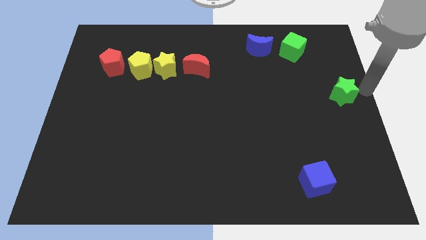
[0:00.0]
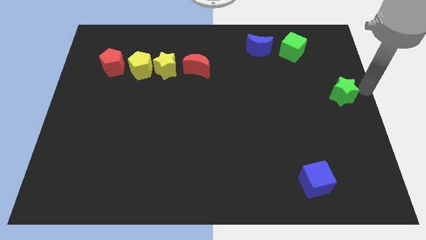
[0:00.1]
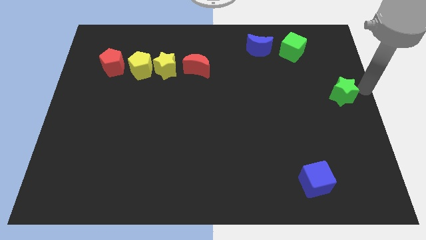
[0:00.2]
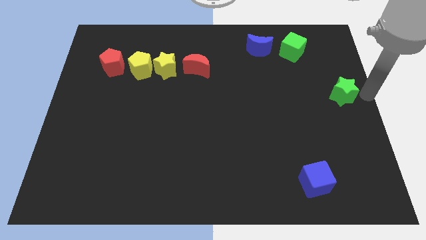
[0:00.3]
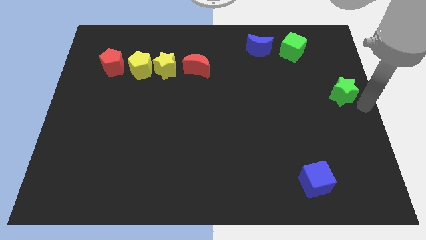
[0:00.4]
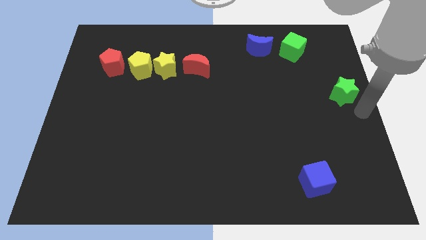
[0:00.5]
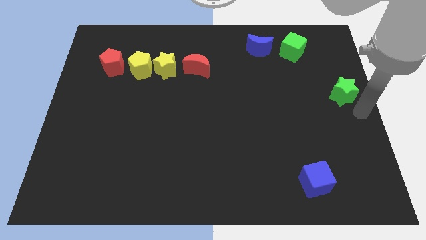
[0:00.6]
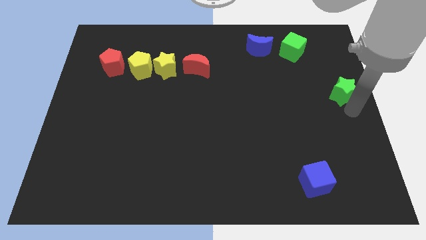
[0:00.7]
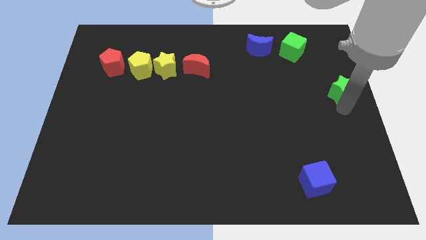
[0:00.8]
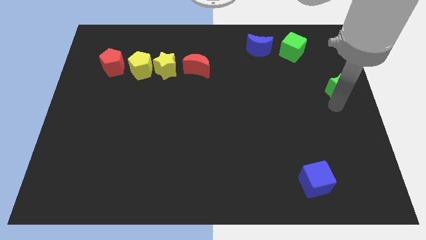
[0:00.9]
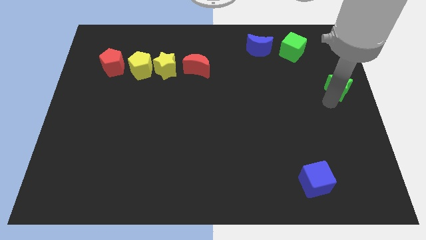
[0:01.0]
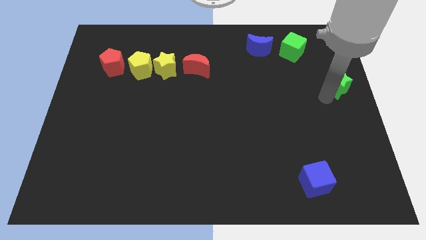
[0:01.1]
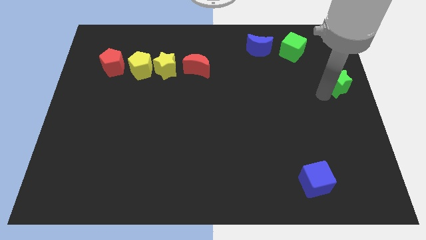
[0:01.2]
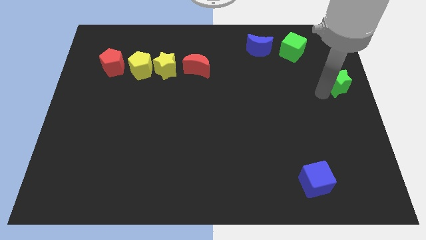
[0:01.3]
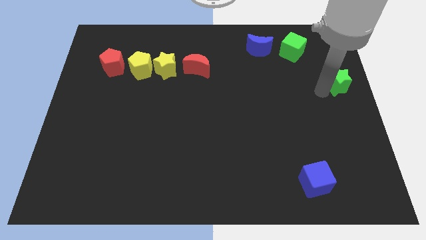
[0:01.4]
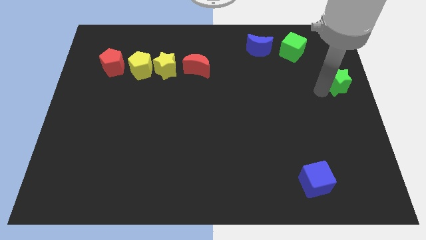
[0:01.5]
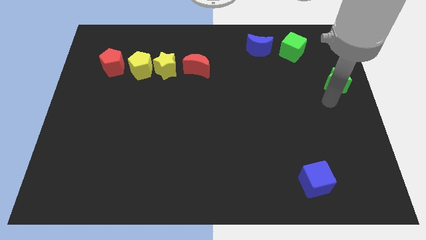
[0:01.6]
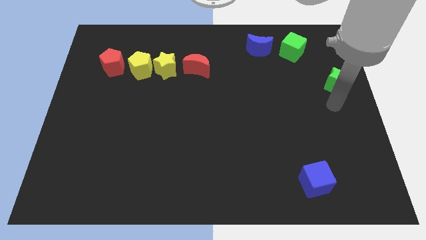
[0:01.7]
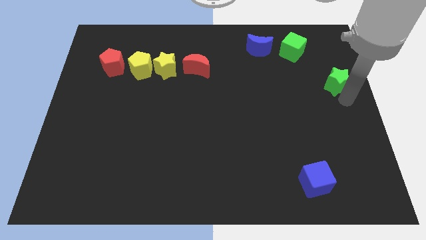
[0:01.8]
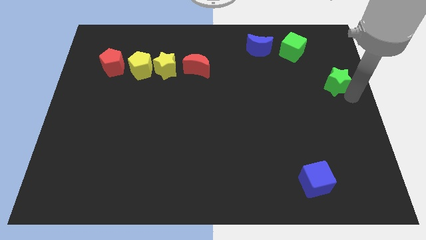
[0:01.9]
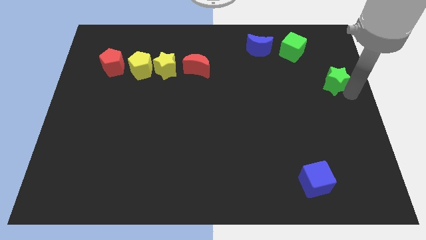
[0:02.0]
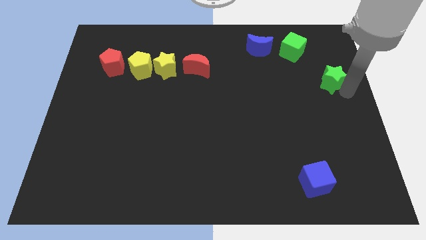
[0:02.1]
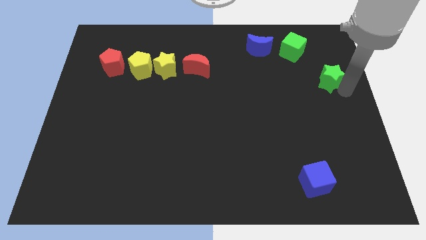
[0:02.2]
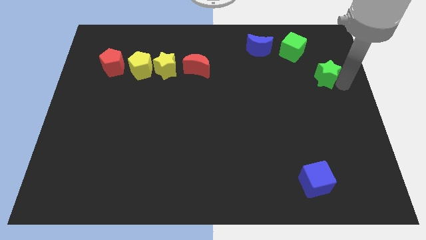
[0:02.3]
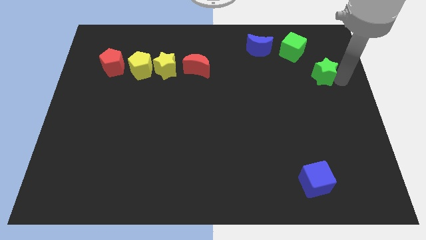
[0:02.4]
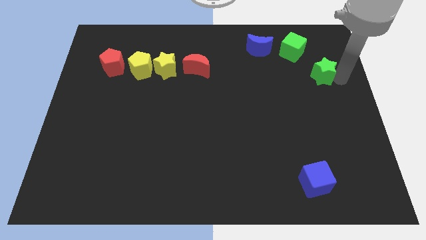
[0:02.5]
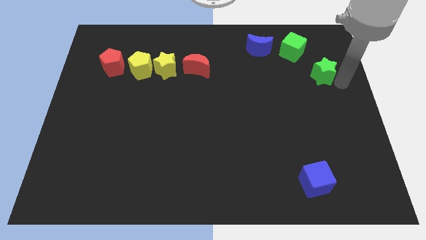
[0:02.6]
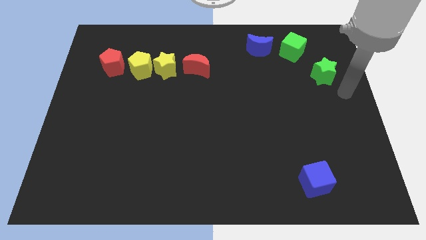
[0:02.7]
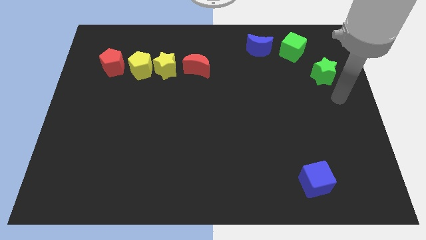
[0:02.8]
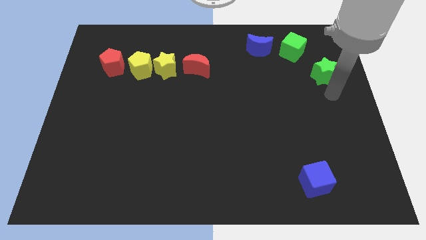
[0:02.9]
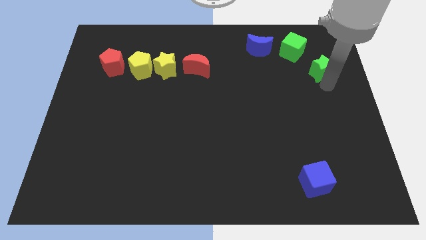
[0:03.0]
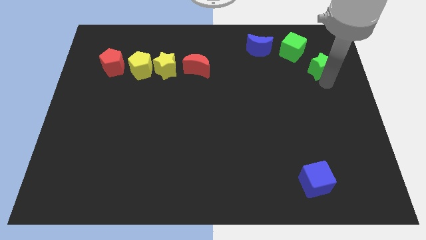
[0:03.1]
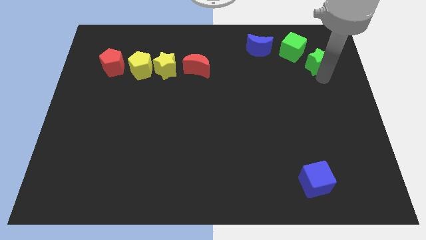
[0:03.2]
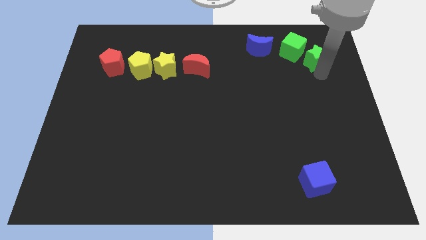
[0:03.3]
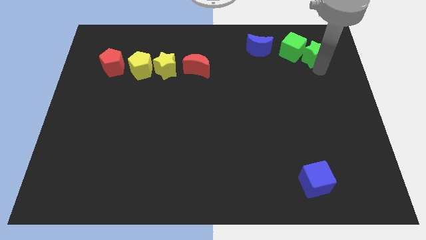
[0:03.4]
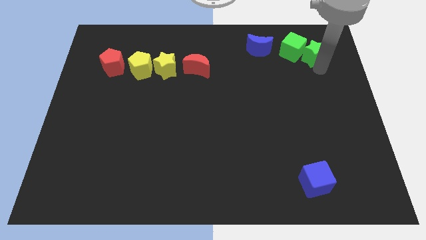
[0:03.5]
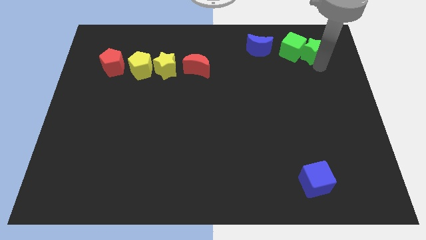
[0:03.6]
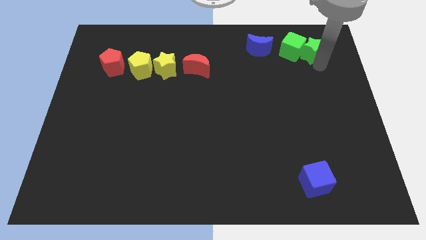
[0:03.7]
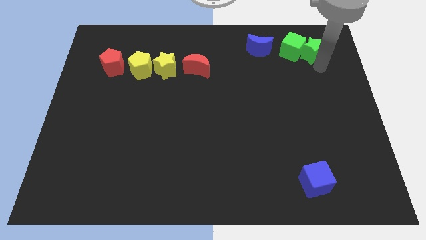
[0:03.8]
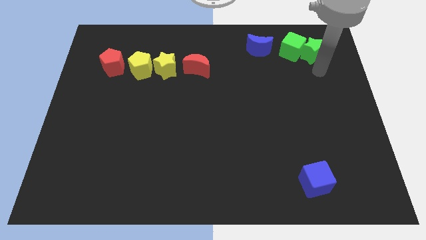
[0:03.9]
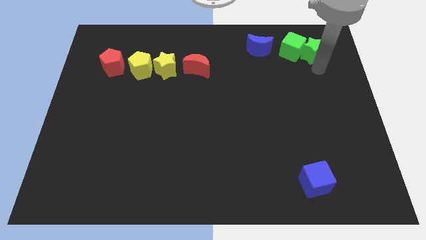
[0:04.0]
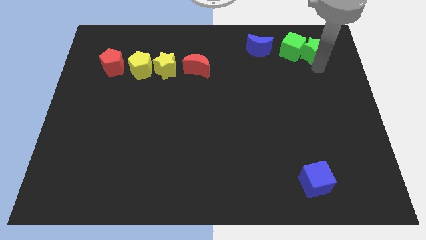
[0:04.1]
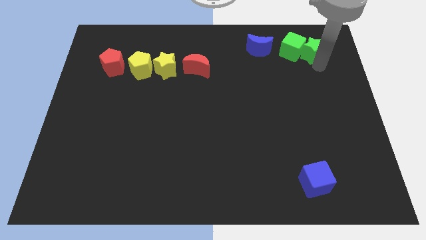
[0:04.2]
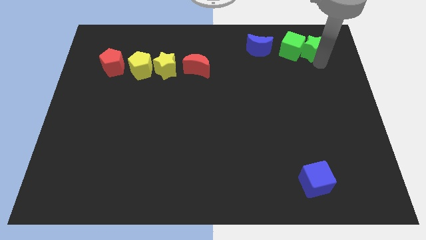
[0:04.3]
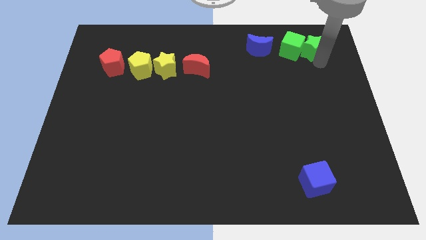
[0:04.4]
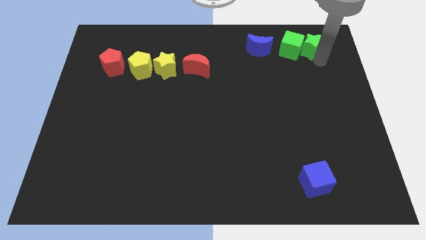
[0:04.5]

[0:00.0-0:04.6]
push the green star to the right of the green cube

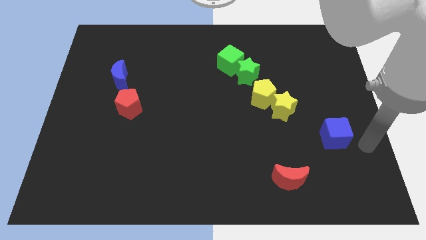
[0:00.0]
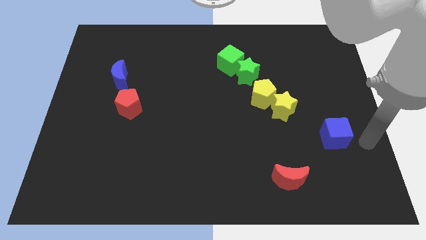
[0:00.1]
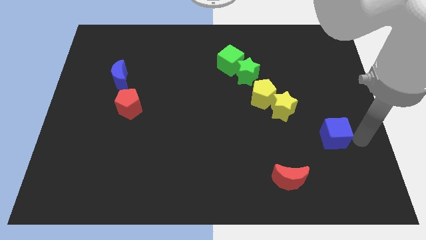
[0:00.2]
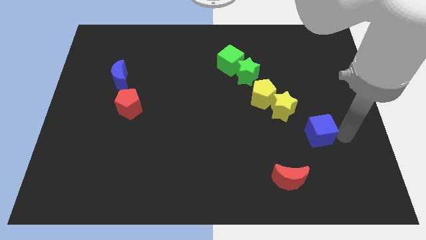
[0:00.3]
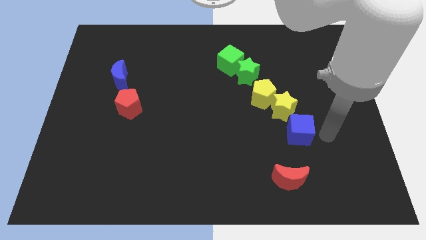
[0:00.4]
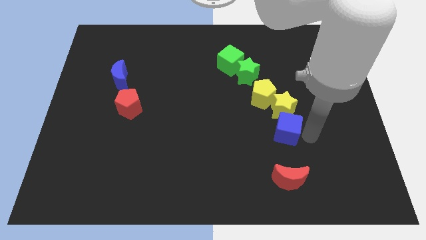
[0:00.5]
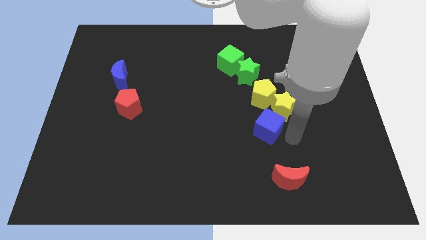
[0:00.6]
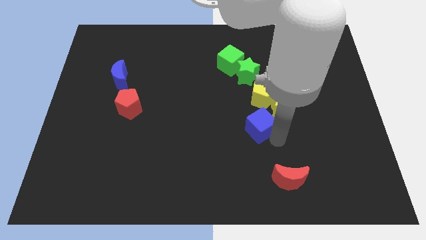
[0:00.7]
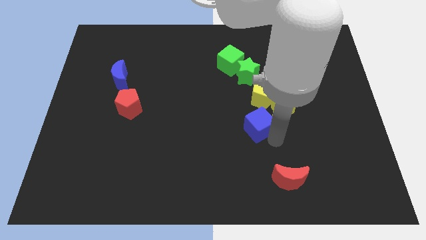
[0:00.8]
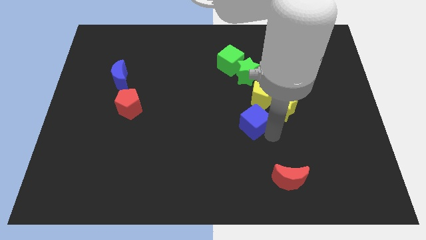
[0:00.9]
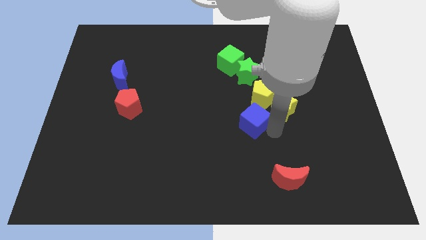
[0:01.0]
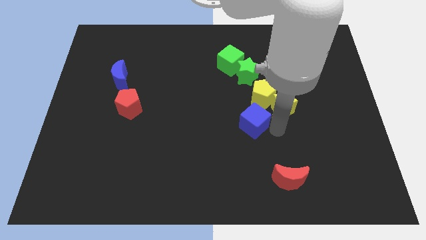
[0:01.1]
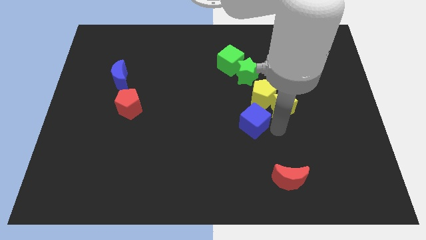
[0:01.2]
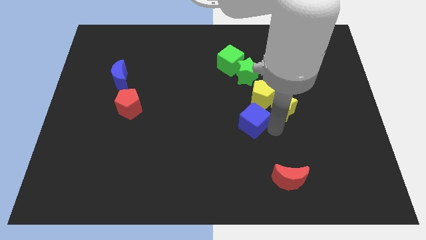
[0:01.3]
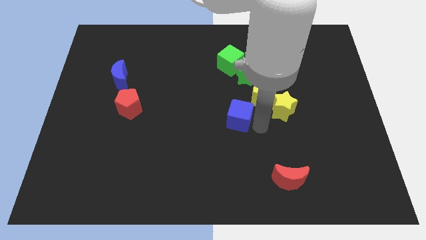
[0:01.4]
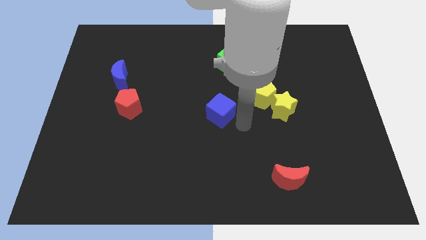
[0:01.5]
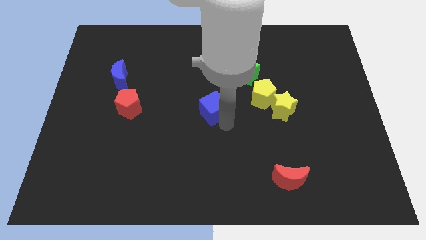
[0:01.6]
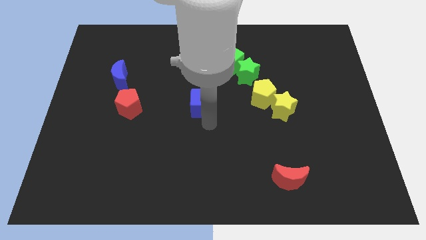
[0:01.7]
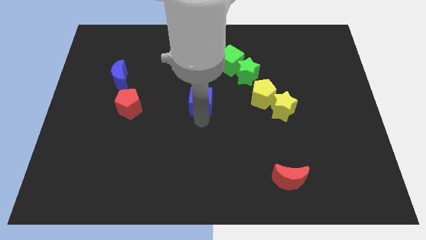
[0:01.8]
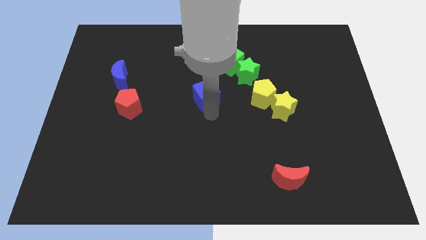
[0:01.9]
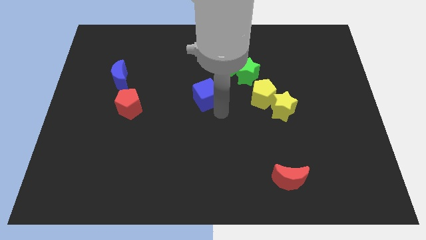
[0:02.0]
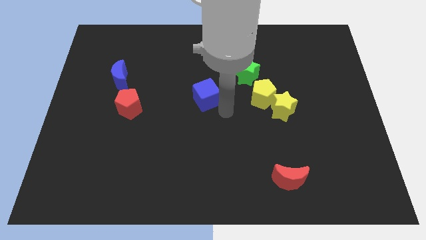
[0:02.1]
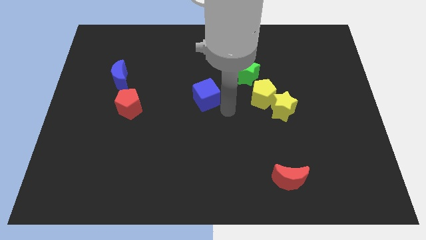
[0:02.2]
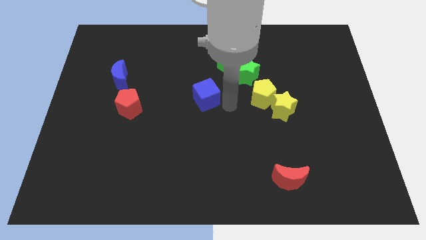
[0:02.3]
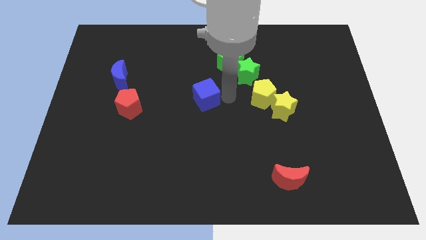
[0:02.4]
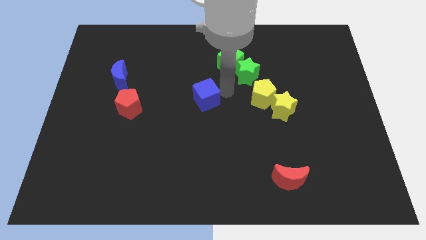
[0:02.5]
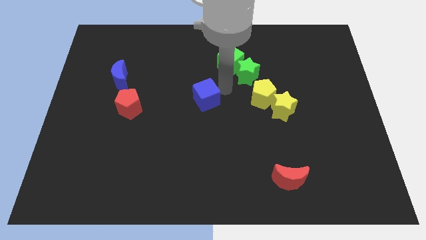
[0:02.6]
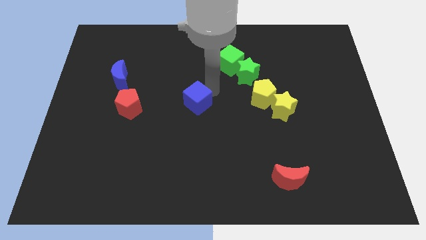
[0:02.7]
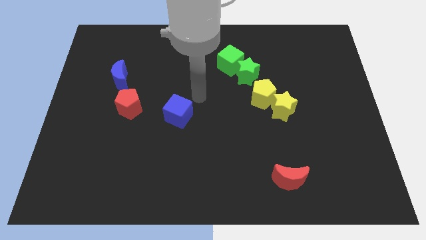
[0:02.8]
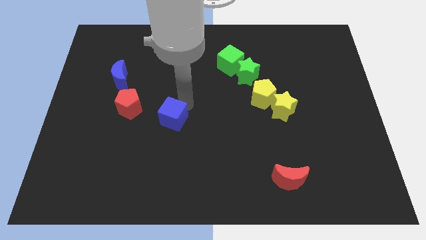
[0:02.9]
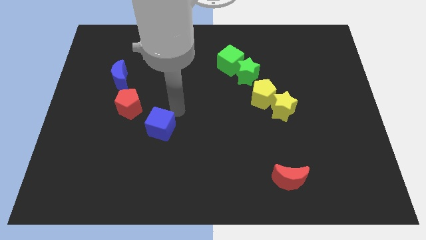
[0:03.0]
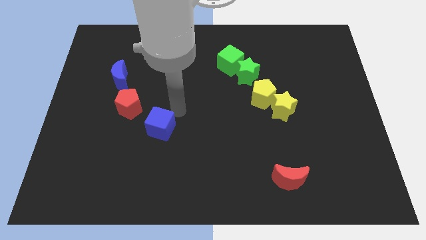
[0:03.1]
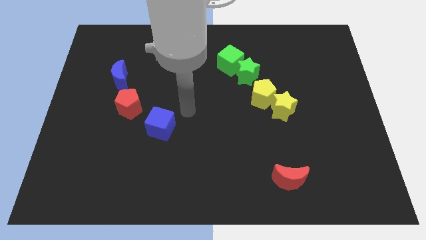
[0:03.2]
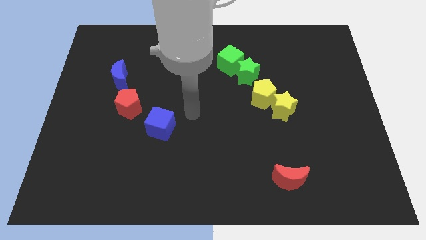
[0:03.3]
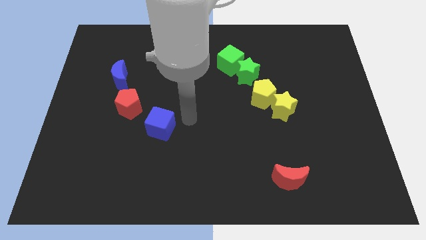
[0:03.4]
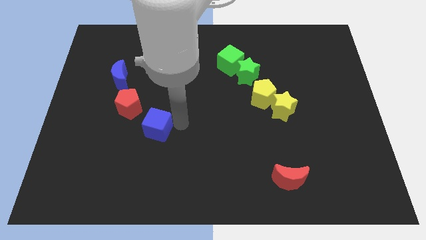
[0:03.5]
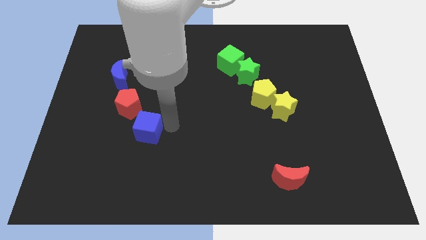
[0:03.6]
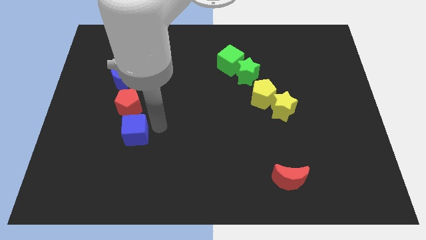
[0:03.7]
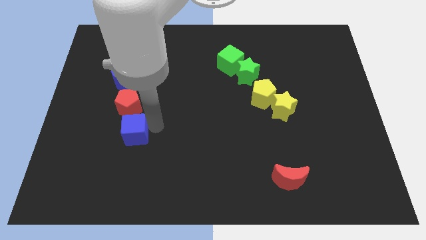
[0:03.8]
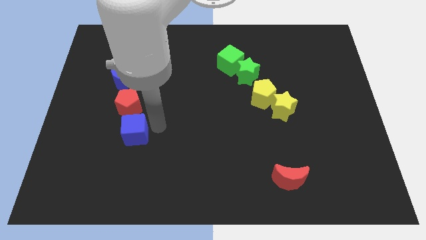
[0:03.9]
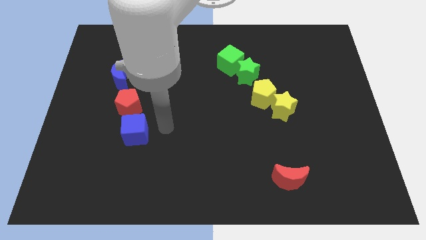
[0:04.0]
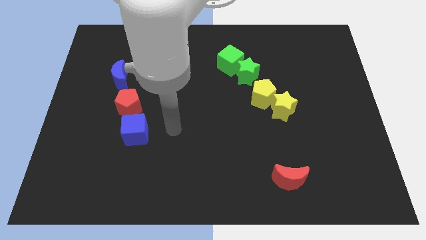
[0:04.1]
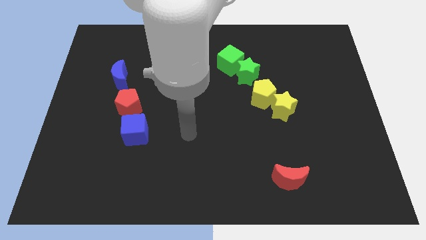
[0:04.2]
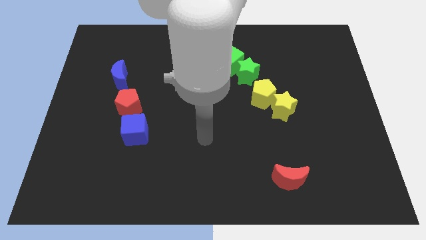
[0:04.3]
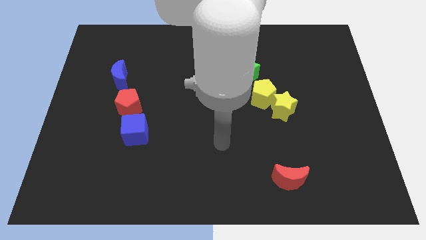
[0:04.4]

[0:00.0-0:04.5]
put the blue cube below the red pentagon

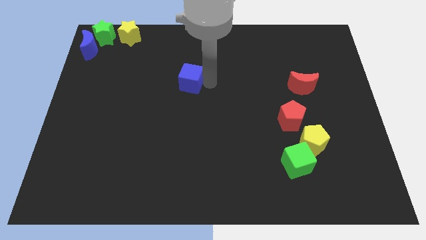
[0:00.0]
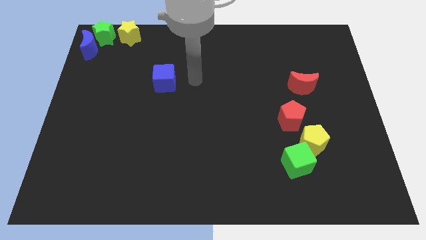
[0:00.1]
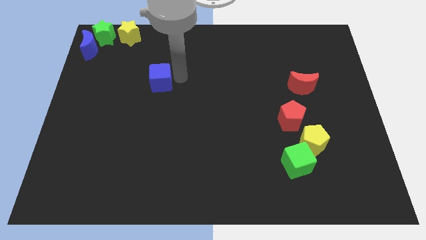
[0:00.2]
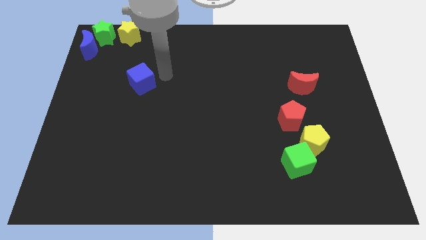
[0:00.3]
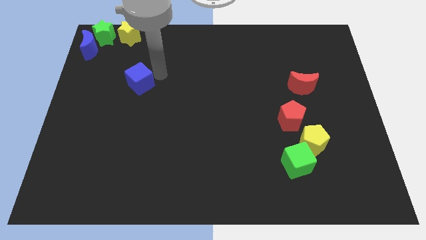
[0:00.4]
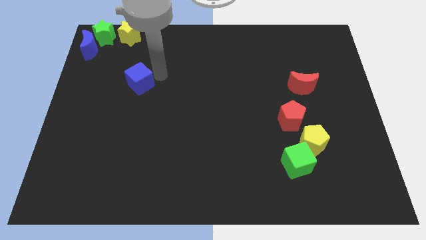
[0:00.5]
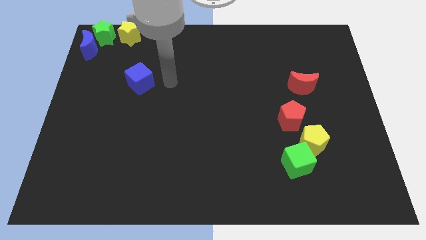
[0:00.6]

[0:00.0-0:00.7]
place blue cube to the bottom of yellow star
